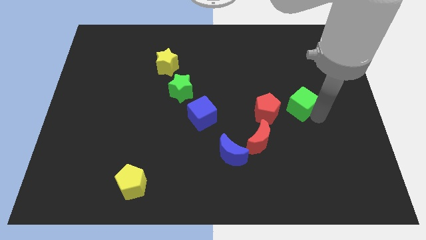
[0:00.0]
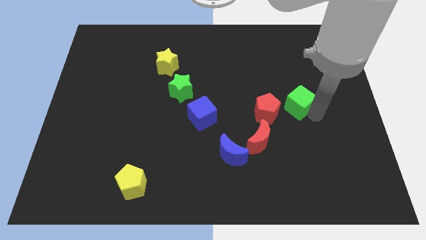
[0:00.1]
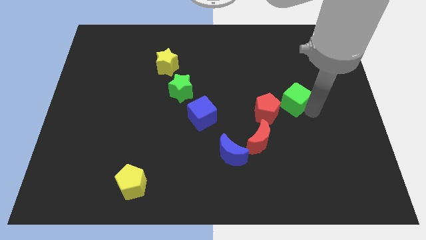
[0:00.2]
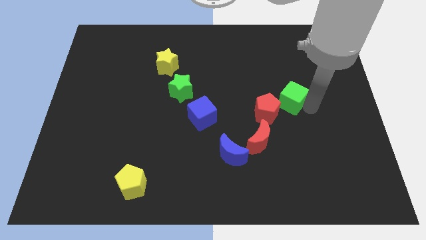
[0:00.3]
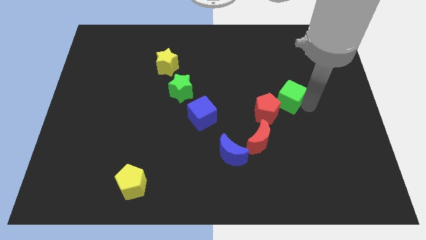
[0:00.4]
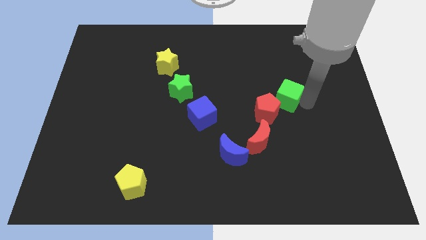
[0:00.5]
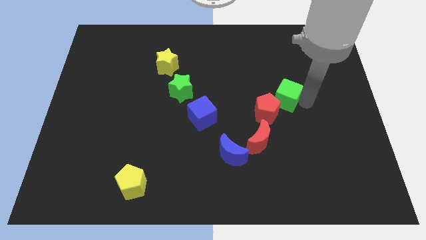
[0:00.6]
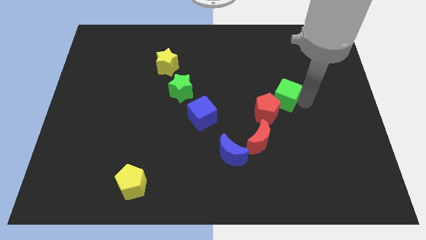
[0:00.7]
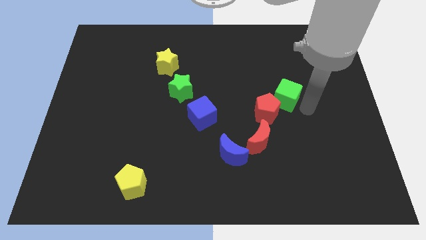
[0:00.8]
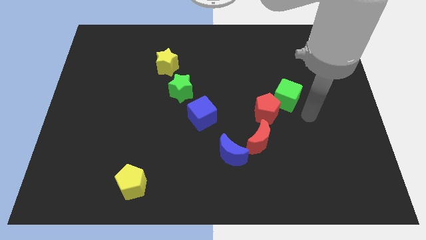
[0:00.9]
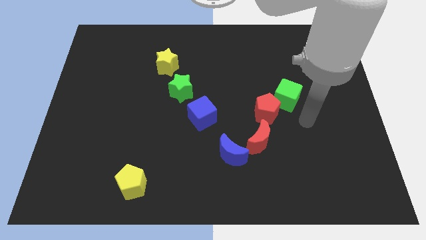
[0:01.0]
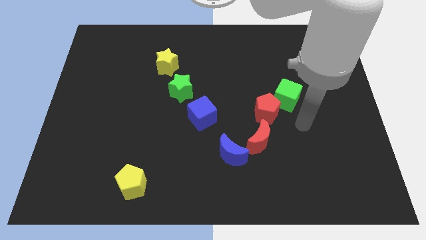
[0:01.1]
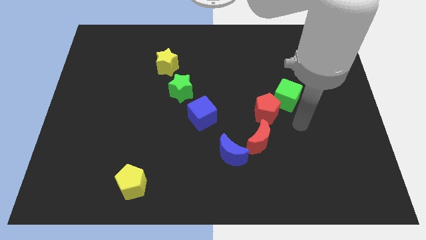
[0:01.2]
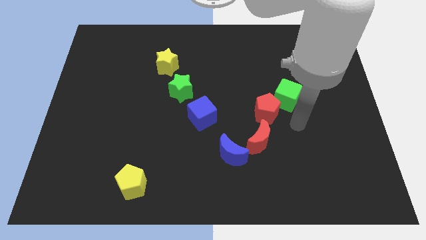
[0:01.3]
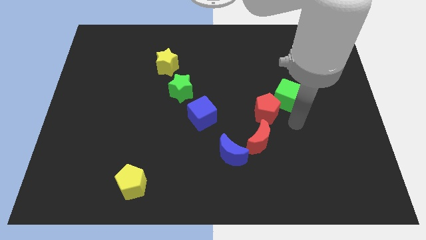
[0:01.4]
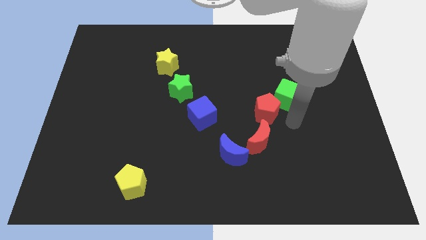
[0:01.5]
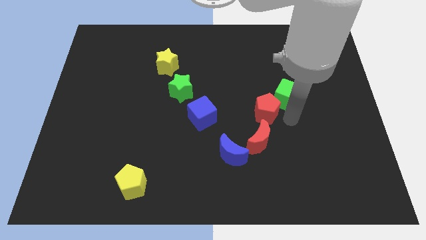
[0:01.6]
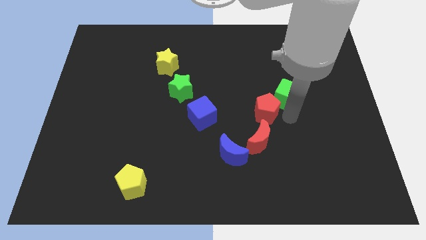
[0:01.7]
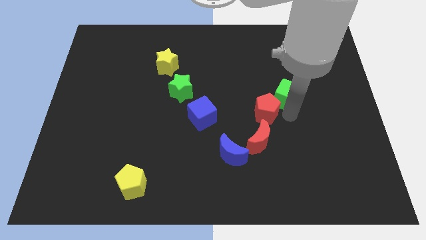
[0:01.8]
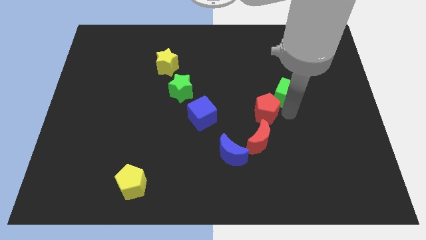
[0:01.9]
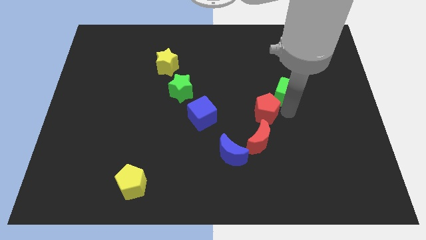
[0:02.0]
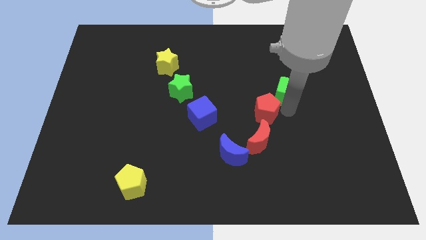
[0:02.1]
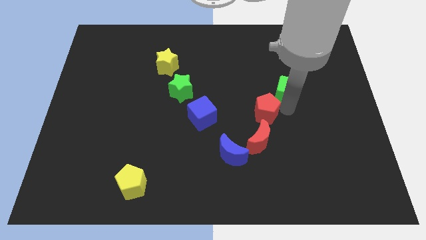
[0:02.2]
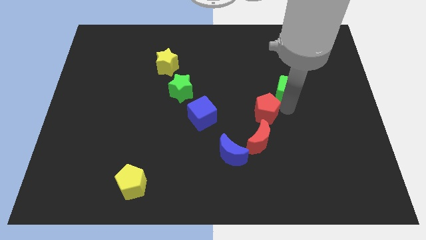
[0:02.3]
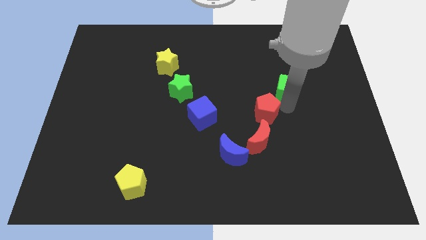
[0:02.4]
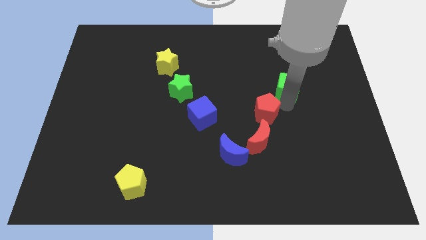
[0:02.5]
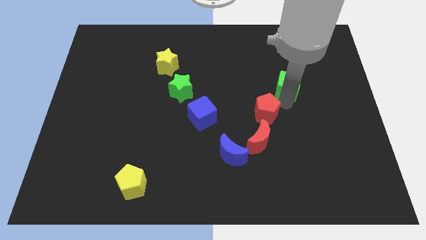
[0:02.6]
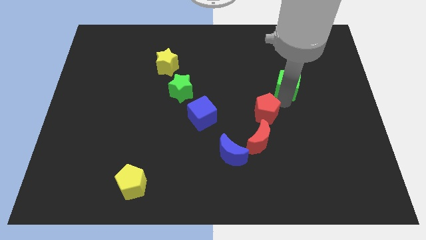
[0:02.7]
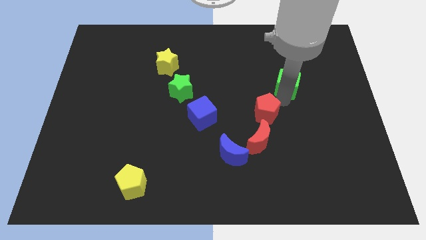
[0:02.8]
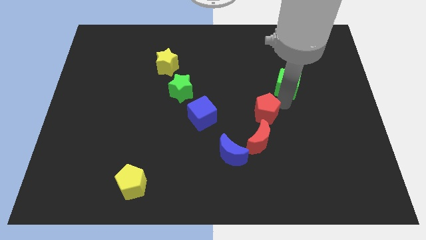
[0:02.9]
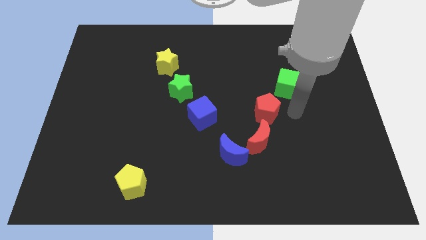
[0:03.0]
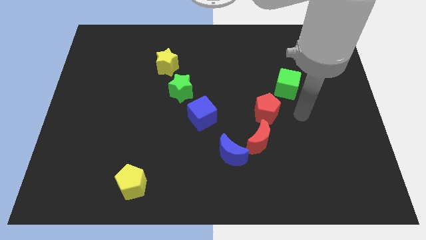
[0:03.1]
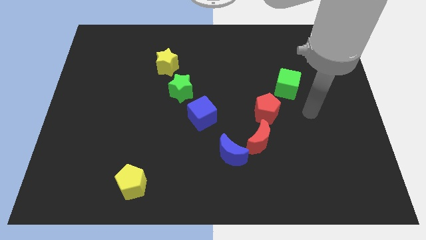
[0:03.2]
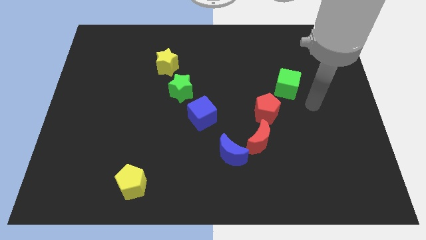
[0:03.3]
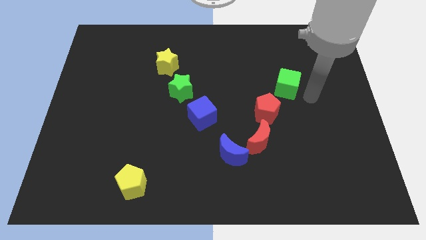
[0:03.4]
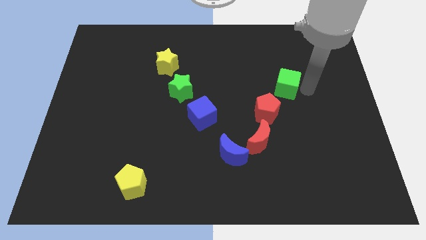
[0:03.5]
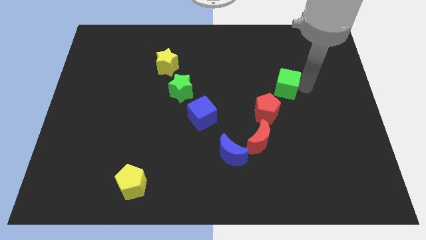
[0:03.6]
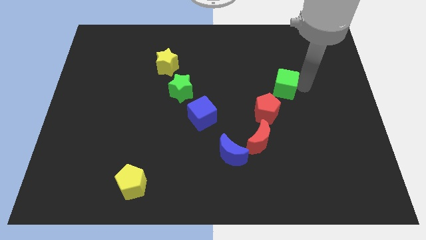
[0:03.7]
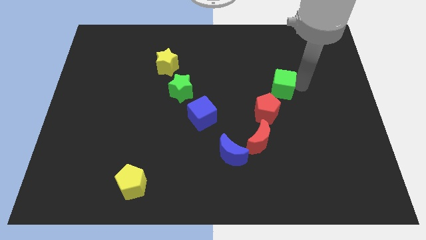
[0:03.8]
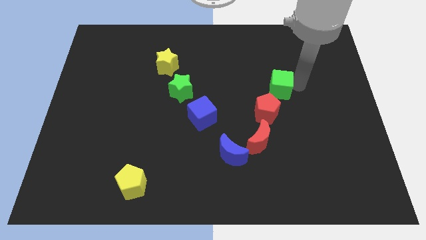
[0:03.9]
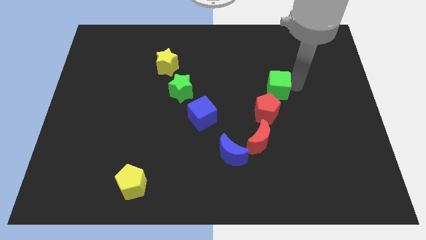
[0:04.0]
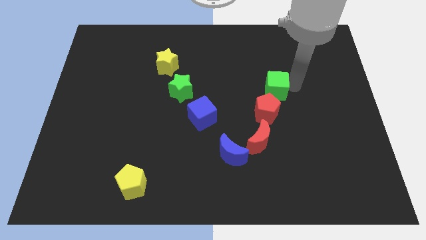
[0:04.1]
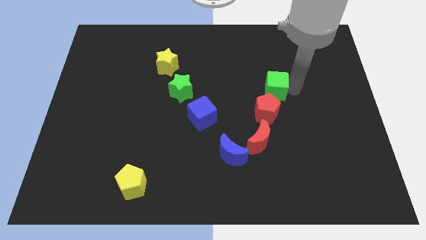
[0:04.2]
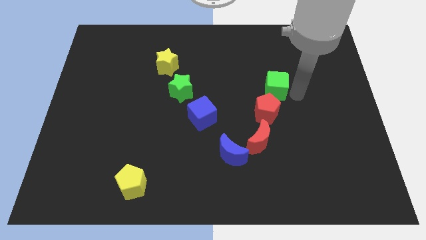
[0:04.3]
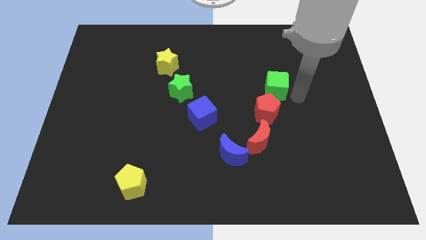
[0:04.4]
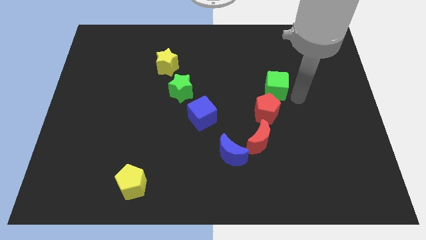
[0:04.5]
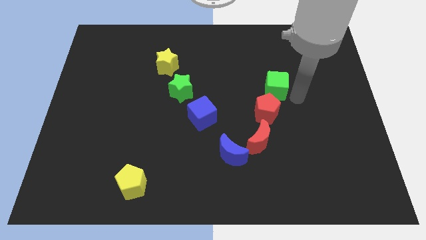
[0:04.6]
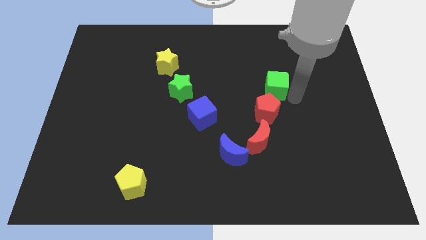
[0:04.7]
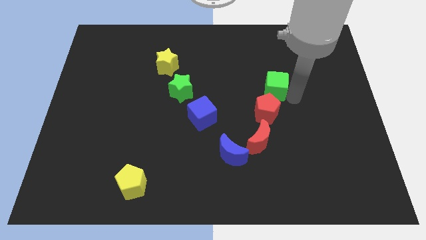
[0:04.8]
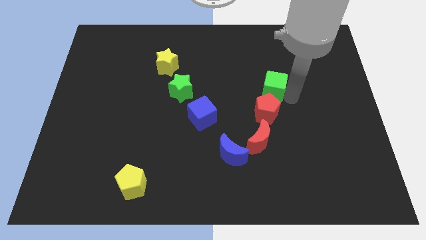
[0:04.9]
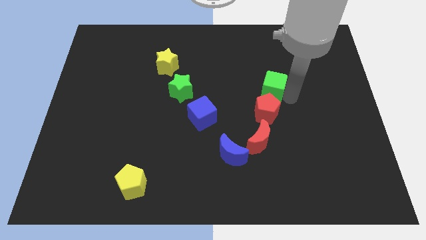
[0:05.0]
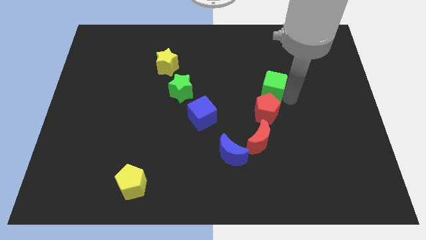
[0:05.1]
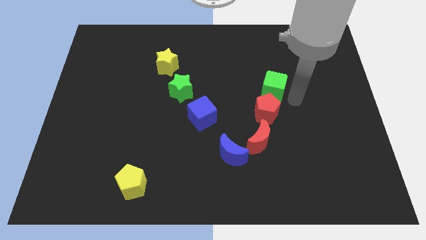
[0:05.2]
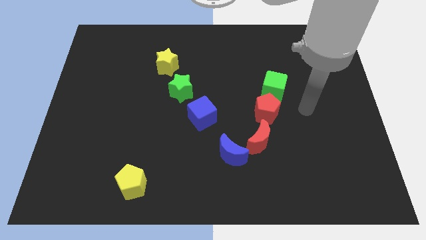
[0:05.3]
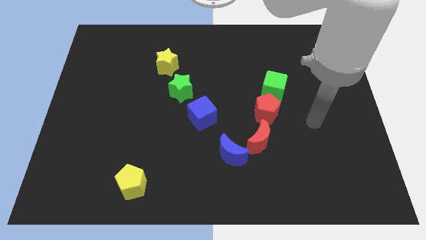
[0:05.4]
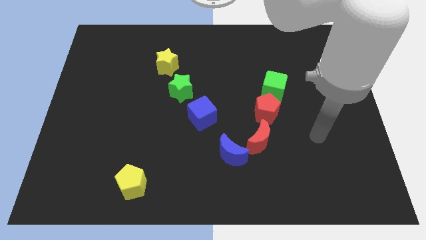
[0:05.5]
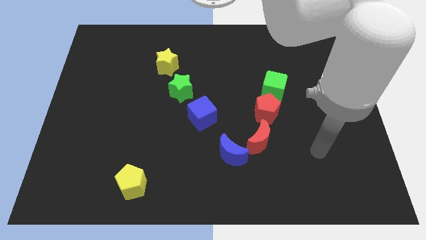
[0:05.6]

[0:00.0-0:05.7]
place the green cube vertically above the red pentagon

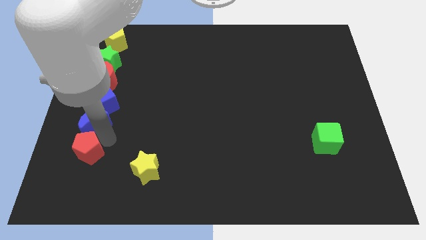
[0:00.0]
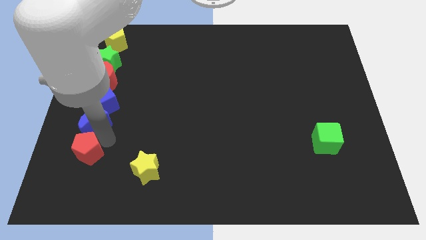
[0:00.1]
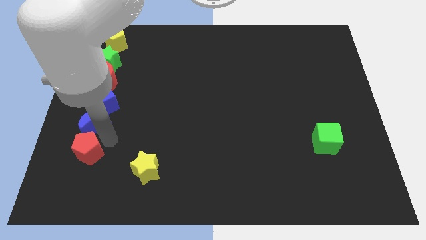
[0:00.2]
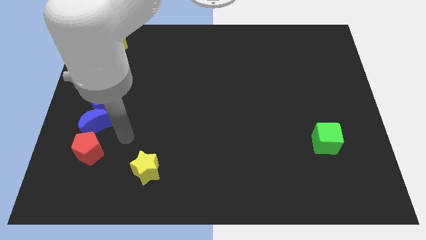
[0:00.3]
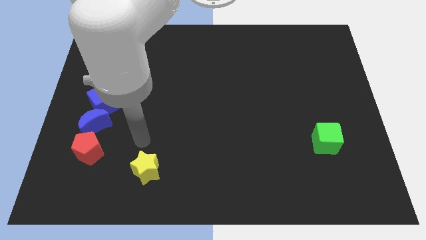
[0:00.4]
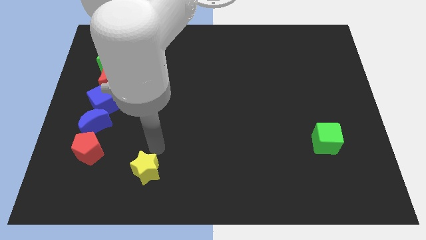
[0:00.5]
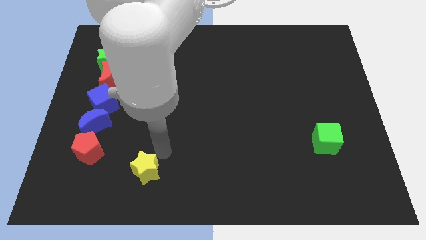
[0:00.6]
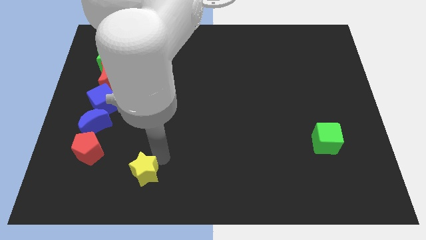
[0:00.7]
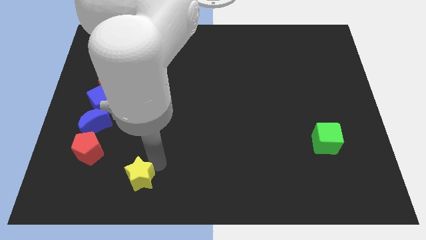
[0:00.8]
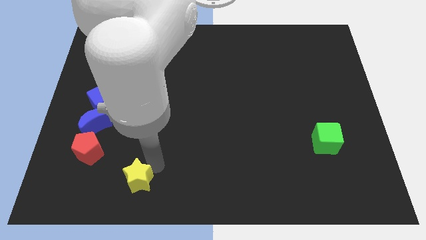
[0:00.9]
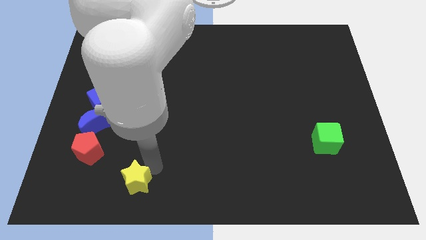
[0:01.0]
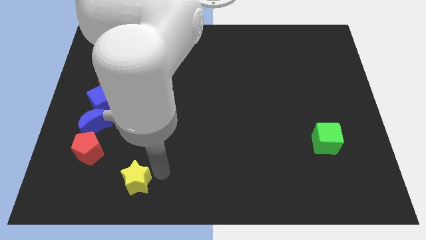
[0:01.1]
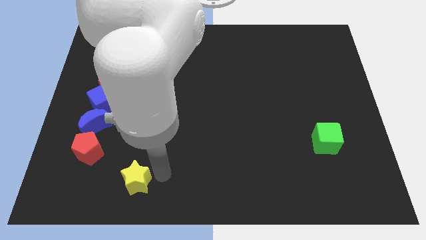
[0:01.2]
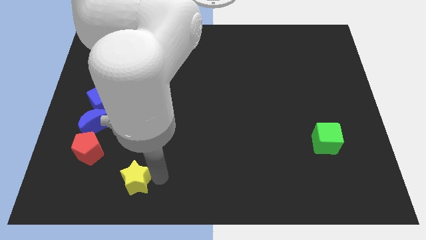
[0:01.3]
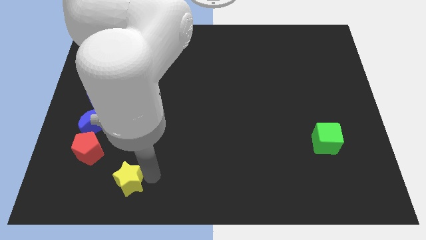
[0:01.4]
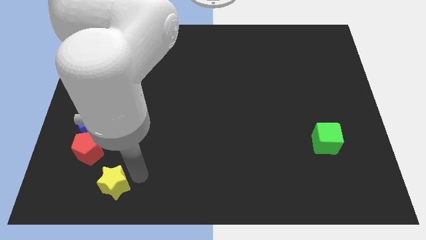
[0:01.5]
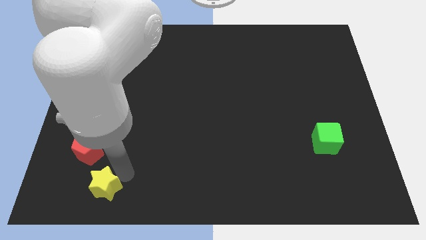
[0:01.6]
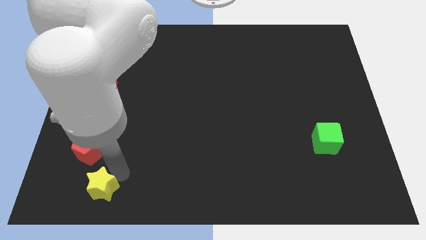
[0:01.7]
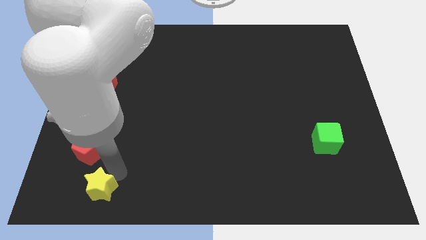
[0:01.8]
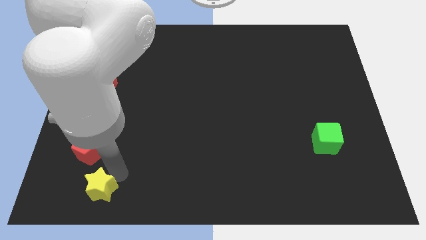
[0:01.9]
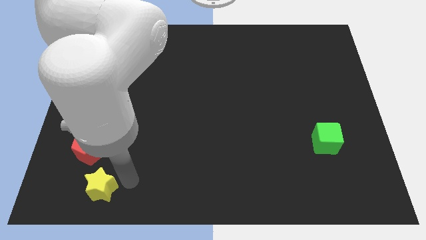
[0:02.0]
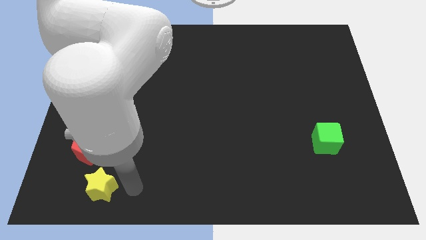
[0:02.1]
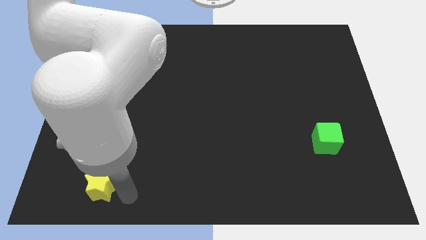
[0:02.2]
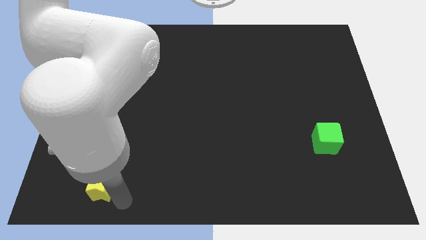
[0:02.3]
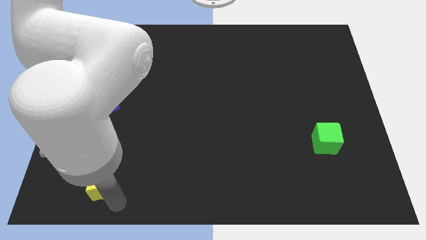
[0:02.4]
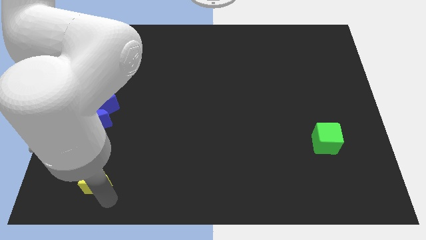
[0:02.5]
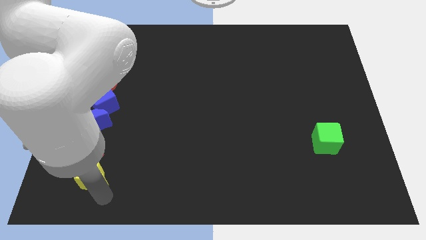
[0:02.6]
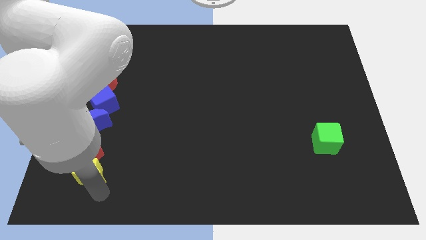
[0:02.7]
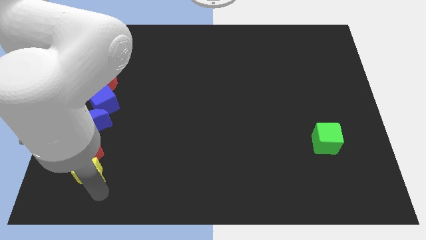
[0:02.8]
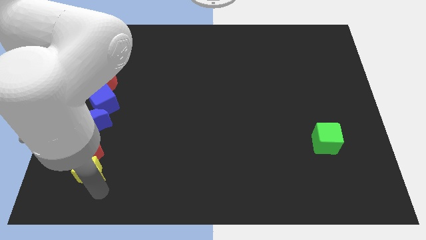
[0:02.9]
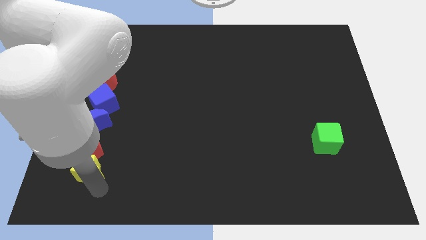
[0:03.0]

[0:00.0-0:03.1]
take the yellow star close to the bottom of the red pentagon

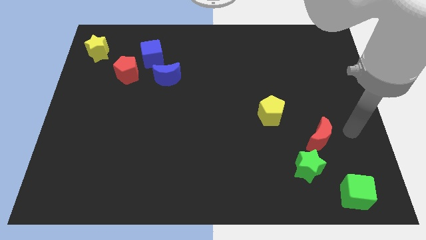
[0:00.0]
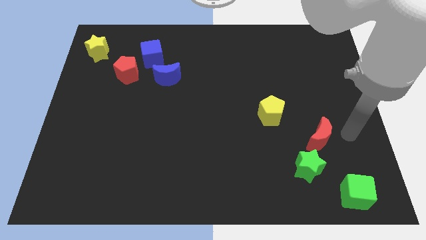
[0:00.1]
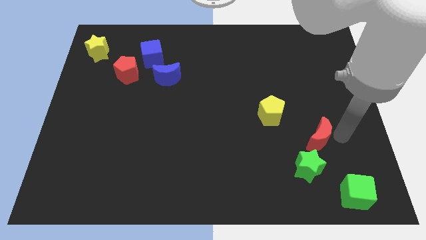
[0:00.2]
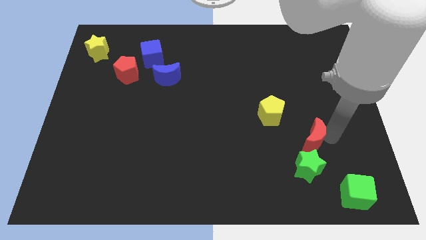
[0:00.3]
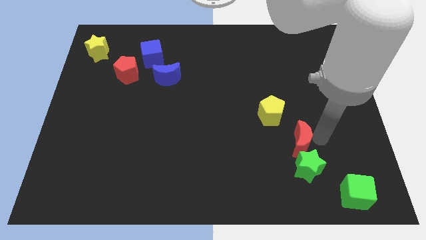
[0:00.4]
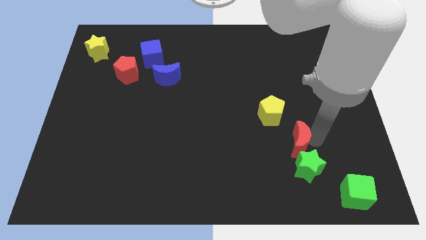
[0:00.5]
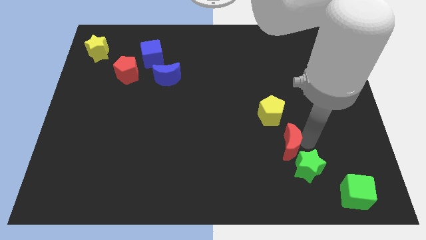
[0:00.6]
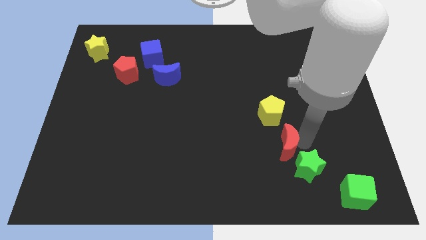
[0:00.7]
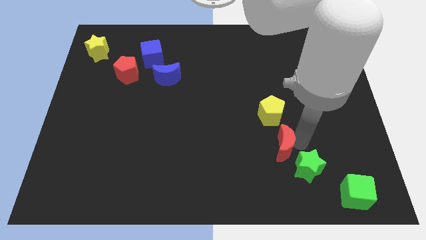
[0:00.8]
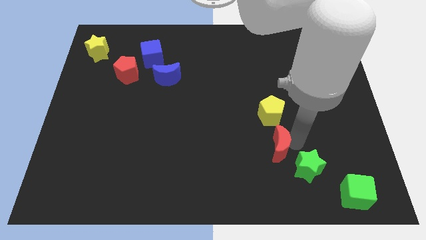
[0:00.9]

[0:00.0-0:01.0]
place red moon to the top right of green star
